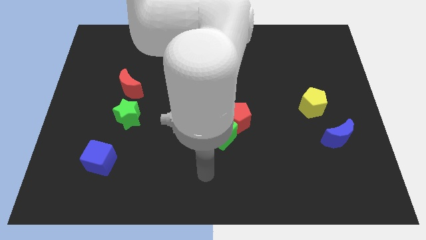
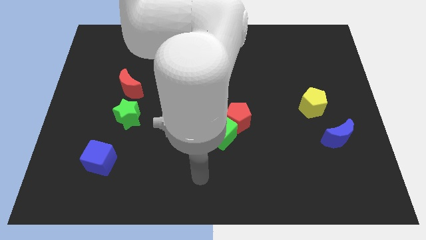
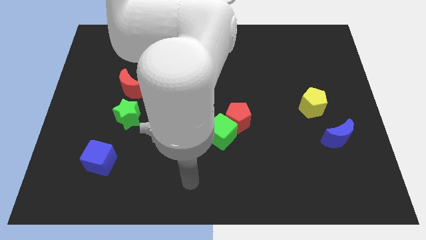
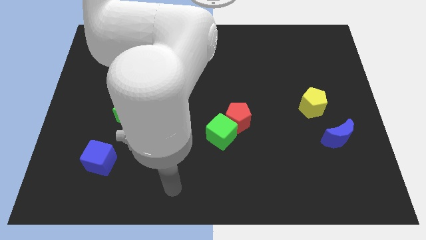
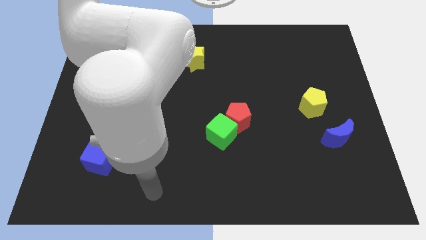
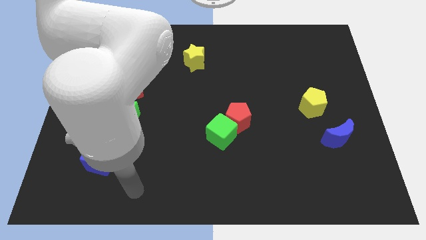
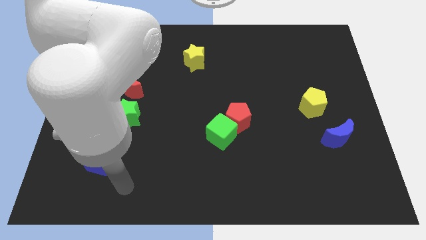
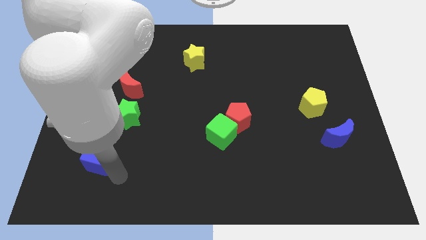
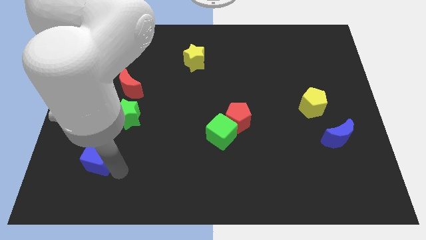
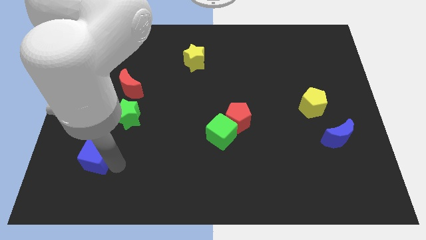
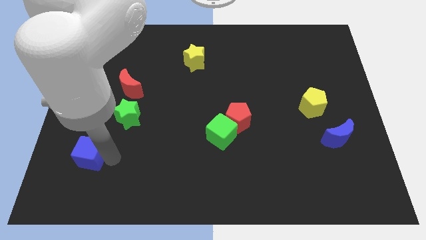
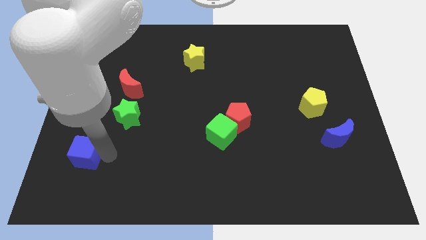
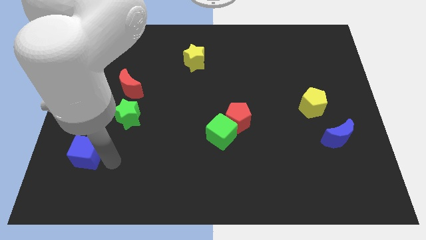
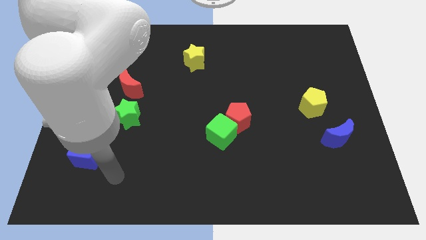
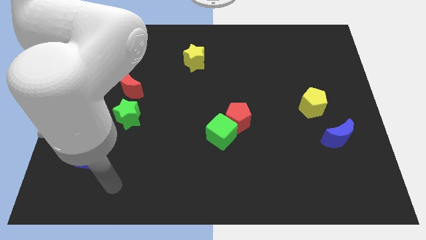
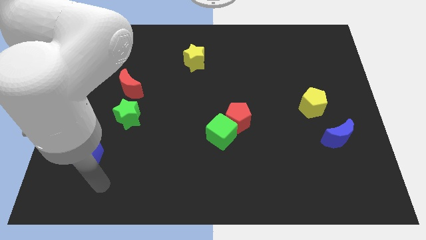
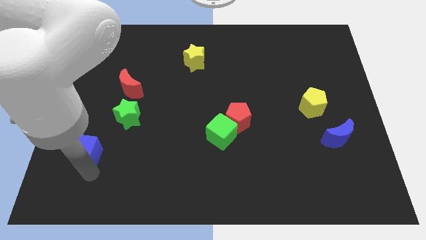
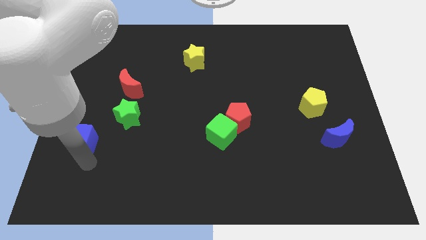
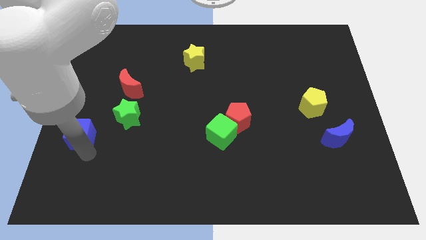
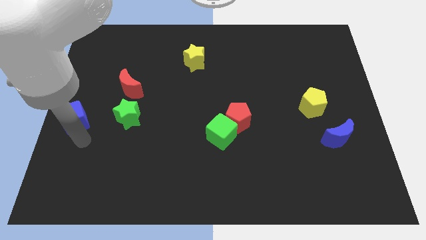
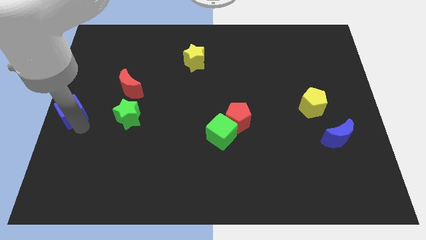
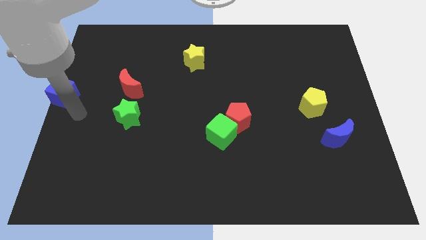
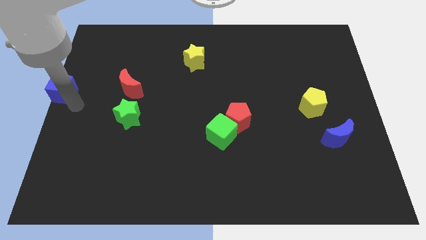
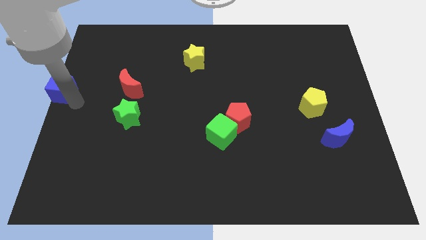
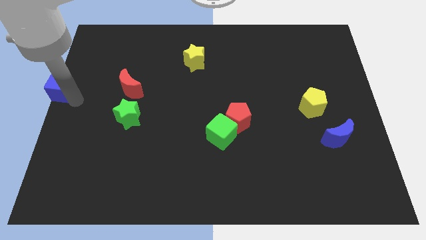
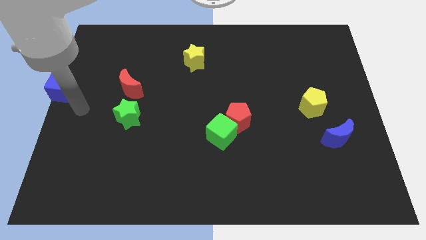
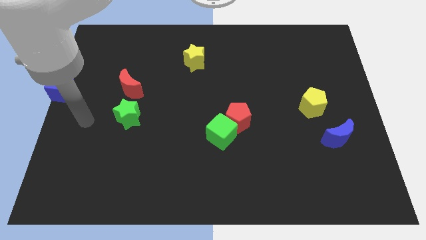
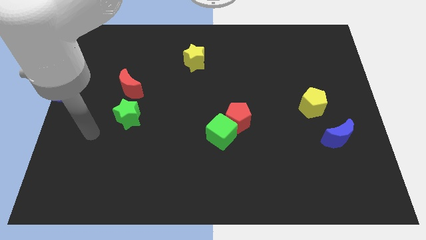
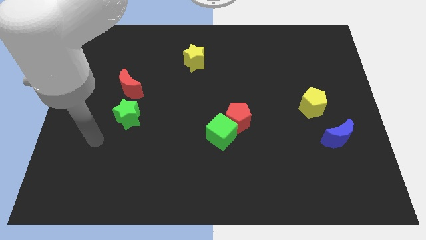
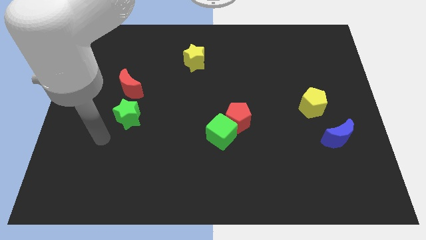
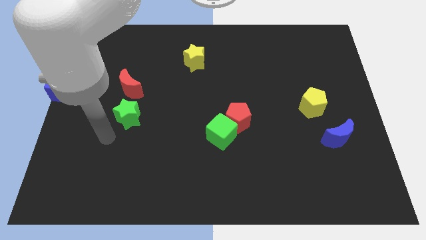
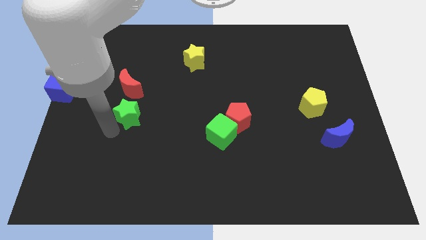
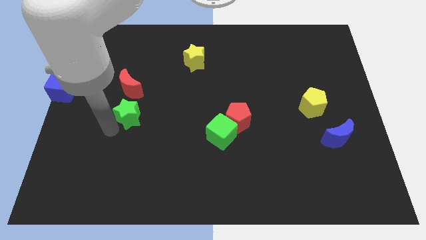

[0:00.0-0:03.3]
move blue cube towards middle left corner of the board

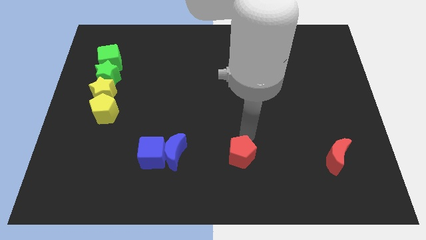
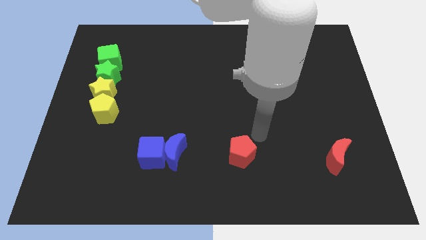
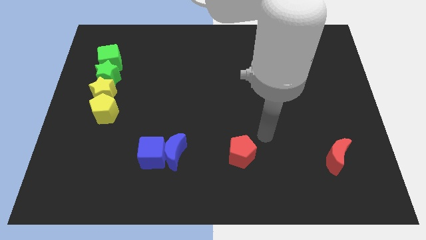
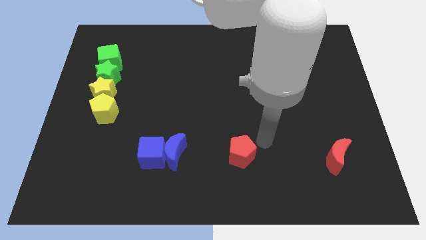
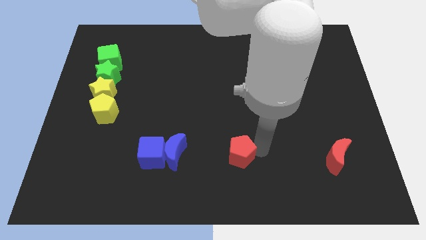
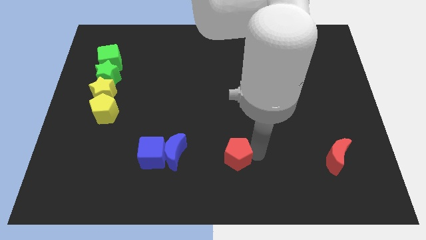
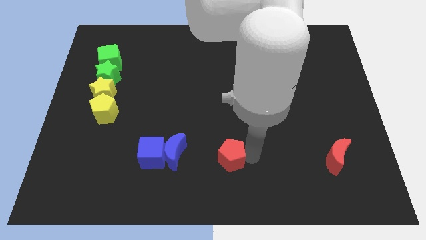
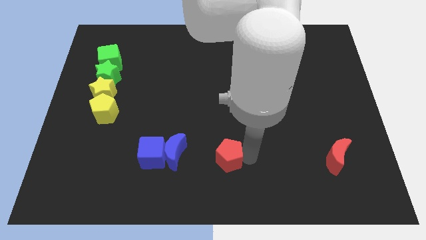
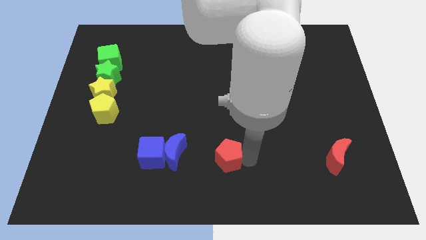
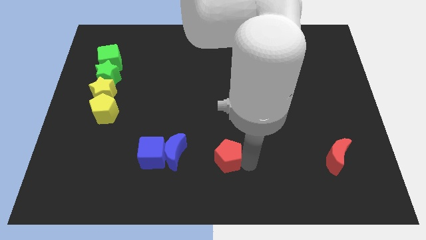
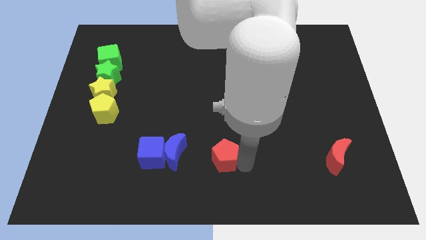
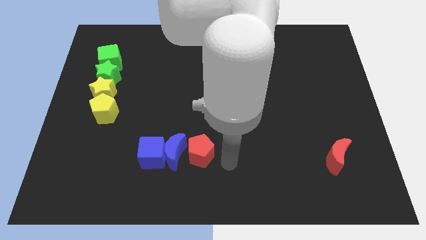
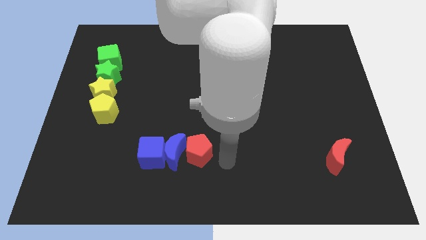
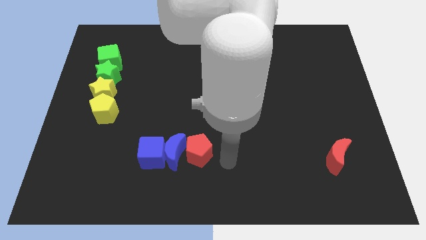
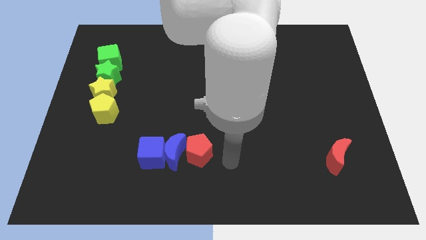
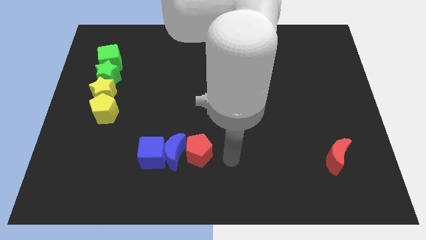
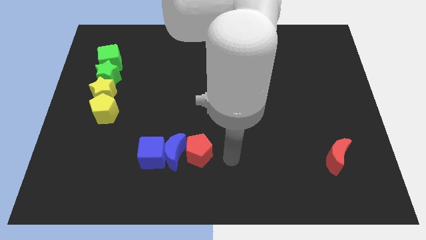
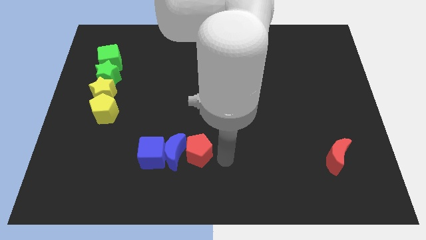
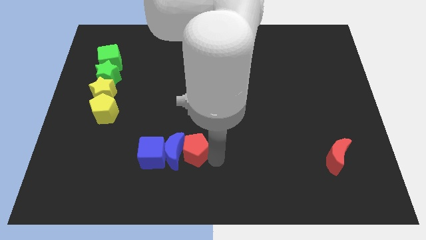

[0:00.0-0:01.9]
push the red pentagon to the right of the blue crescent

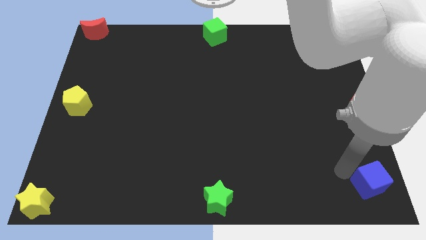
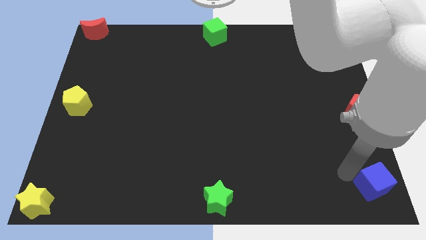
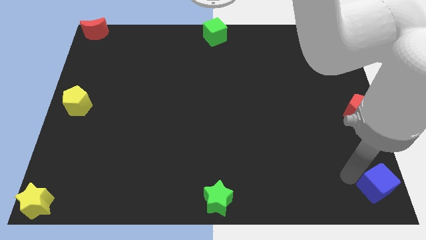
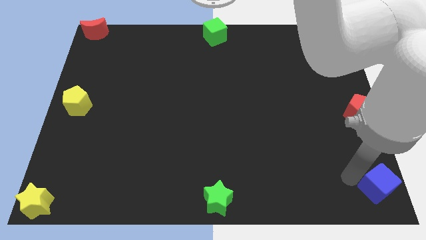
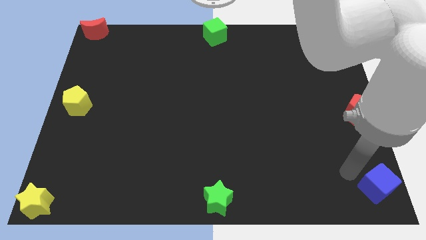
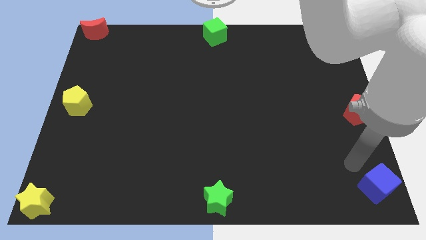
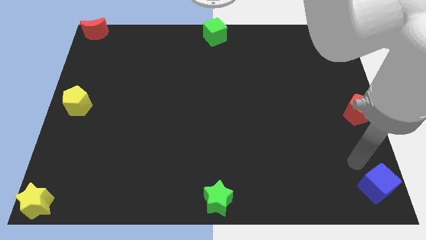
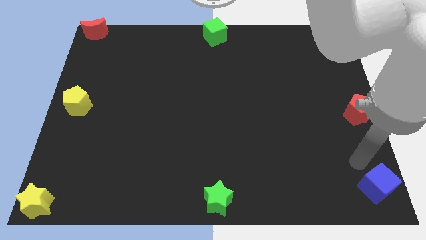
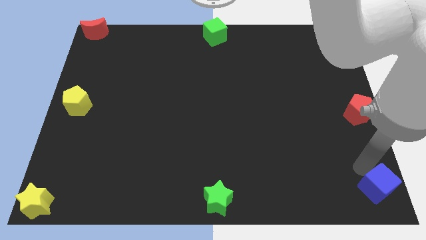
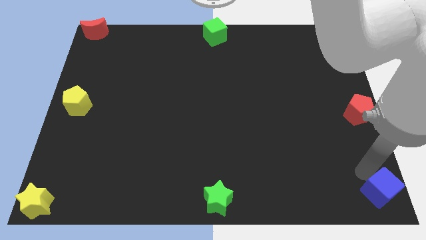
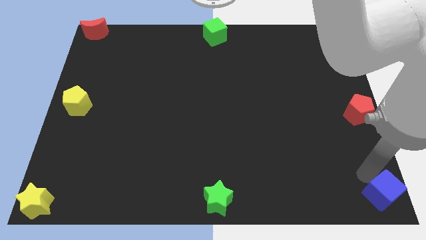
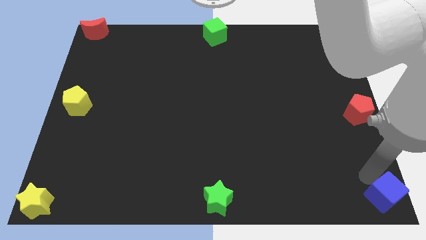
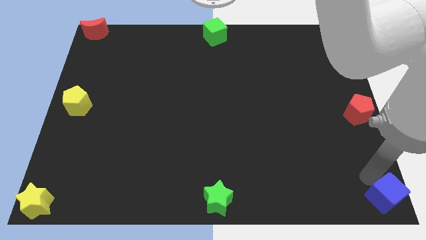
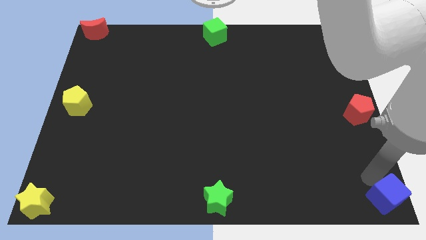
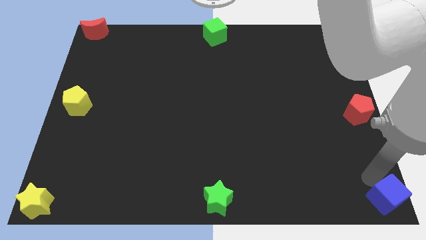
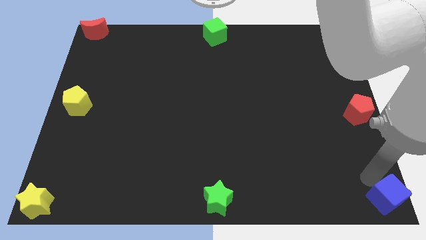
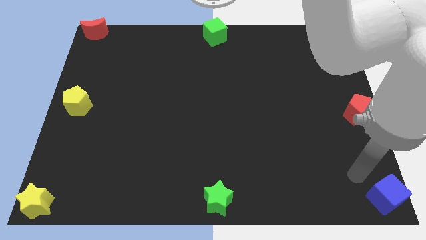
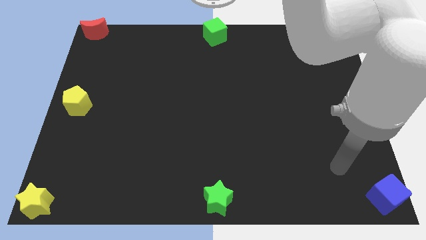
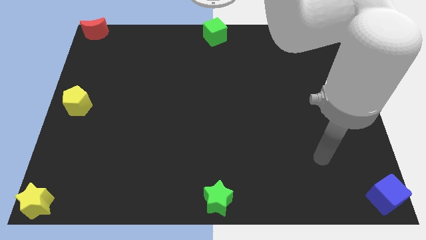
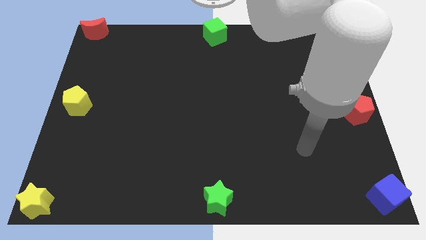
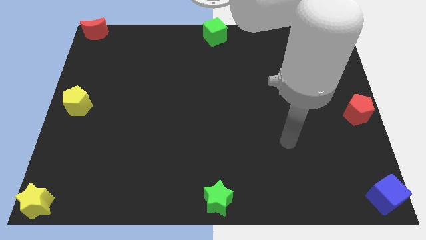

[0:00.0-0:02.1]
put the blue cube parallel to green star

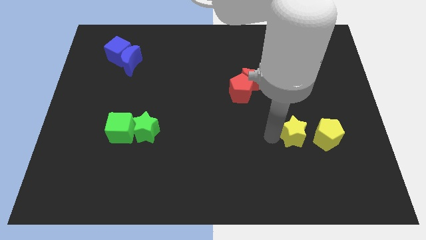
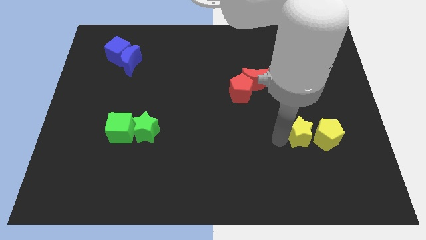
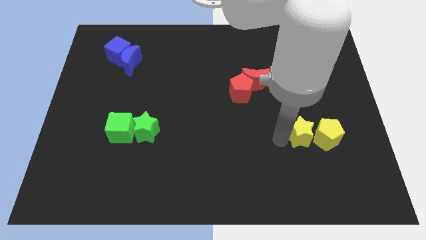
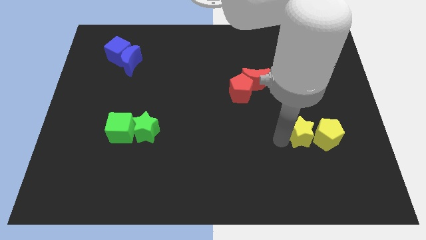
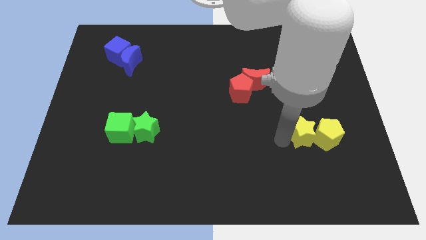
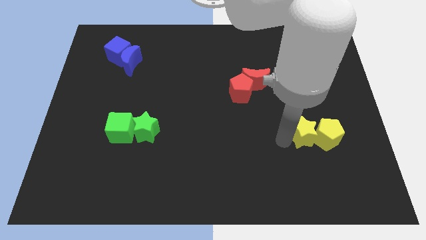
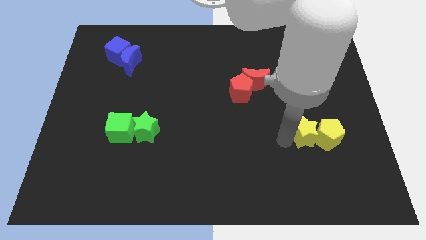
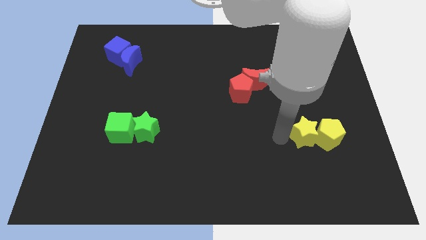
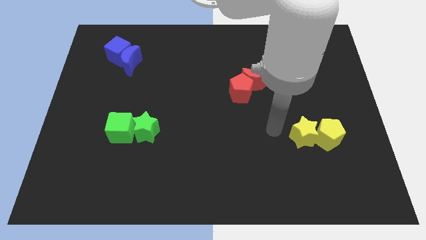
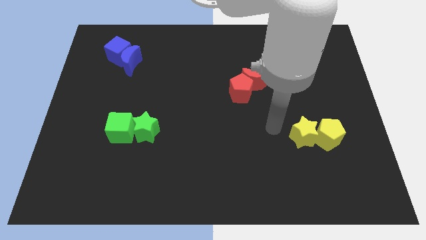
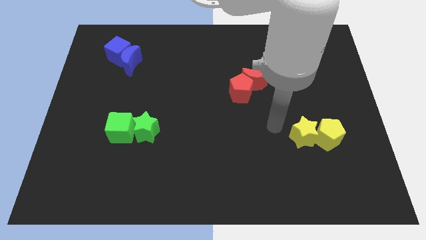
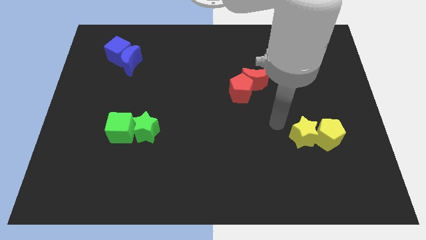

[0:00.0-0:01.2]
push yellow star beside yellow pentagon

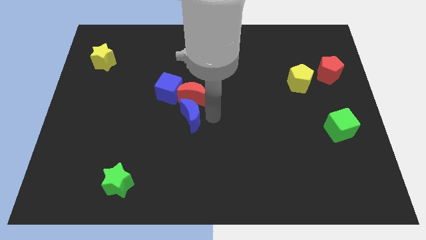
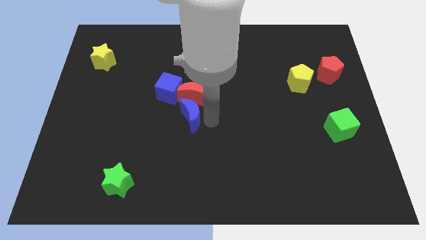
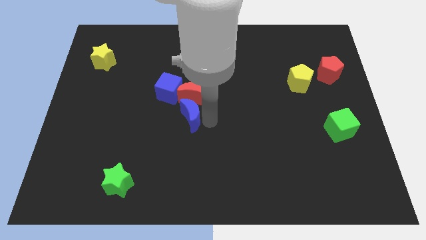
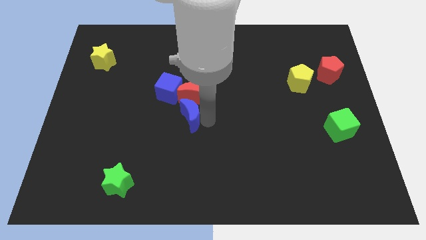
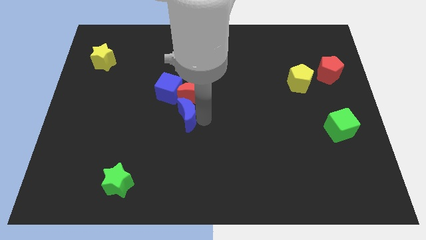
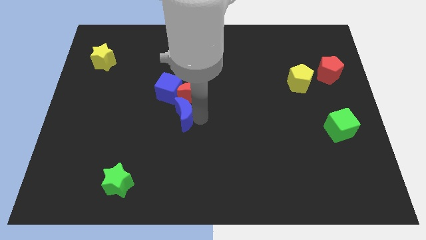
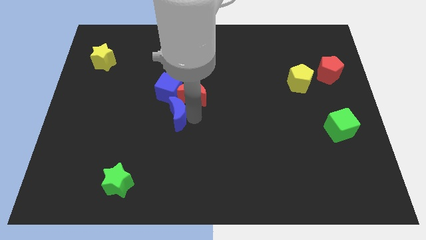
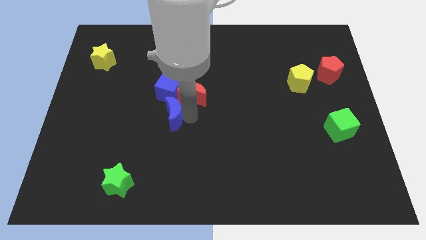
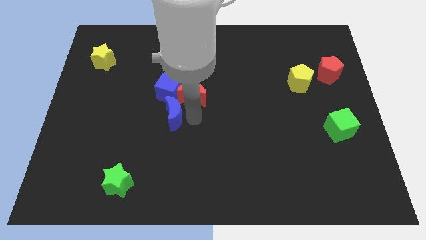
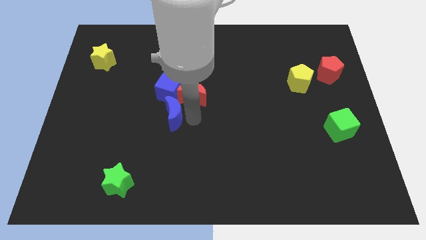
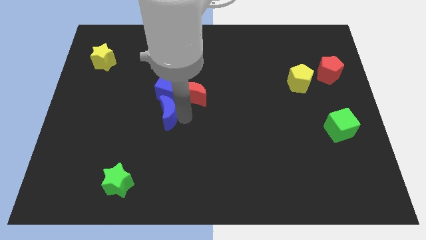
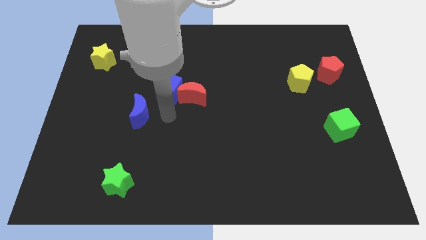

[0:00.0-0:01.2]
push blue moon to the bottom left of the blue cube
